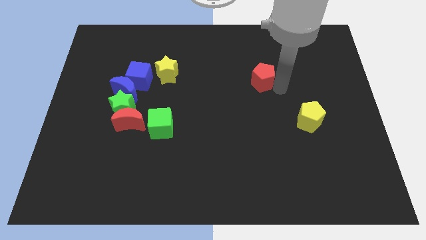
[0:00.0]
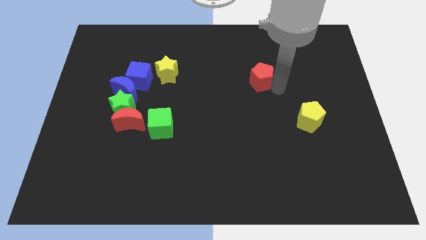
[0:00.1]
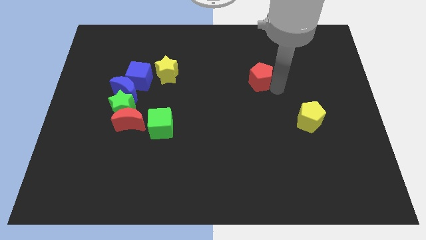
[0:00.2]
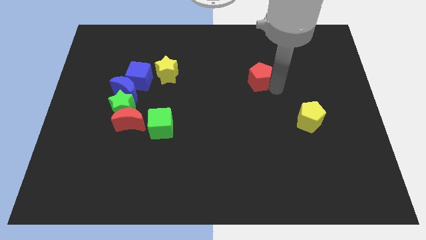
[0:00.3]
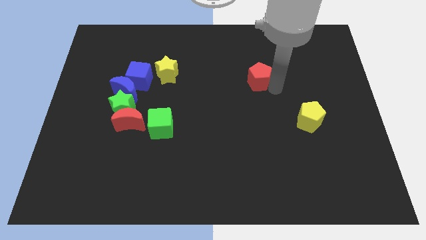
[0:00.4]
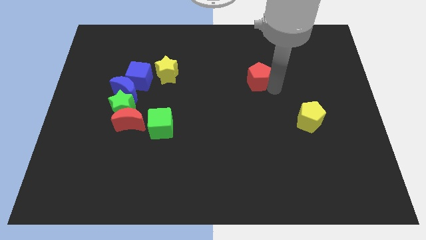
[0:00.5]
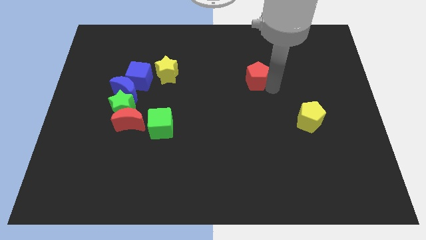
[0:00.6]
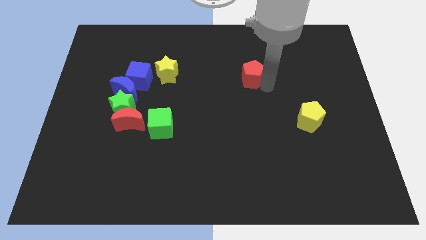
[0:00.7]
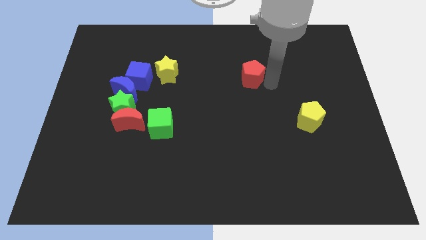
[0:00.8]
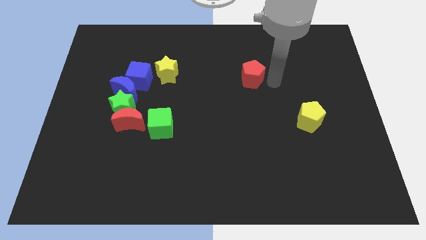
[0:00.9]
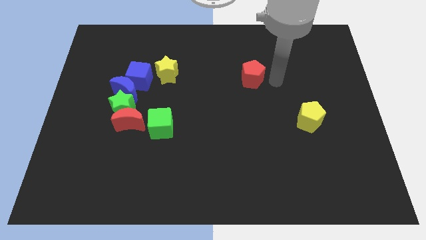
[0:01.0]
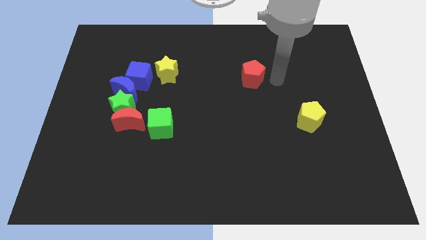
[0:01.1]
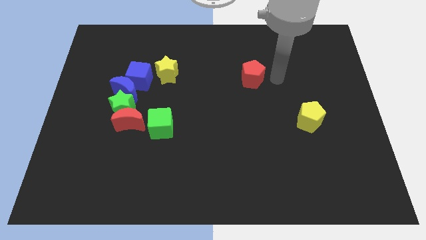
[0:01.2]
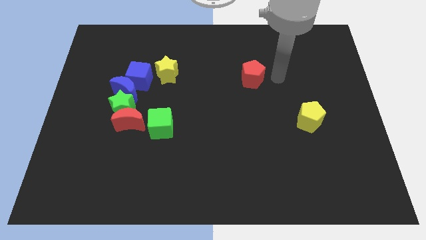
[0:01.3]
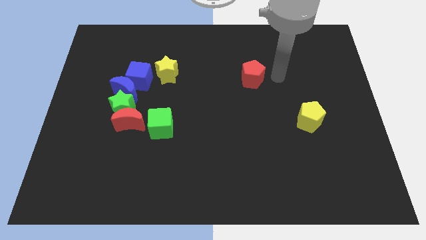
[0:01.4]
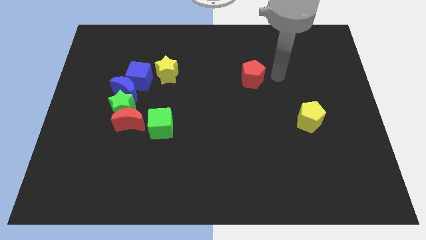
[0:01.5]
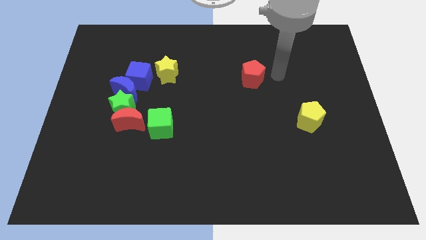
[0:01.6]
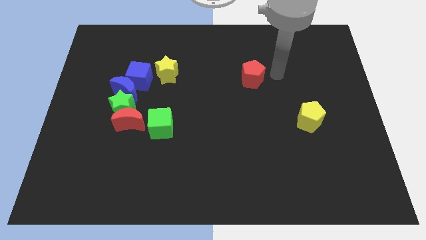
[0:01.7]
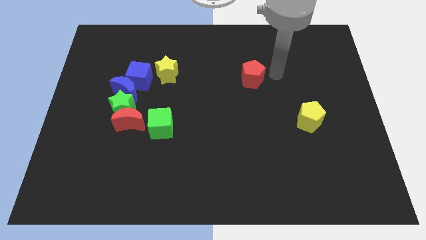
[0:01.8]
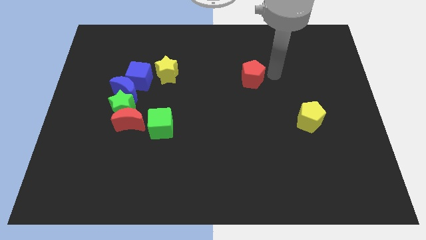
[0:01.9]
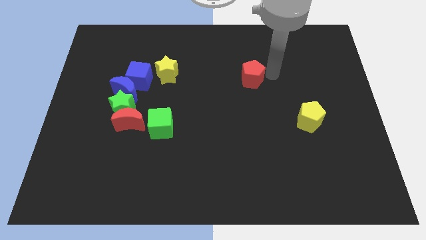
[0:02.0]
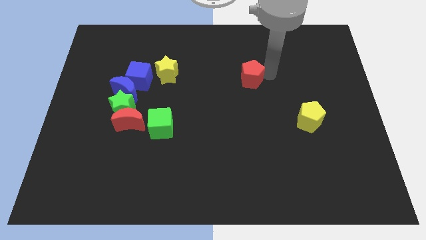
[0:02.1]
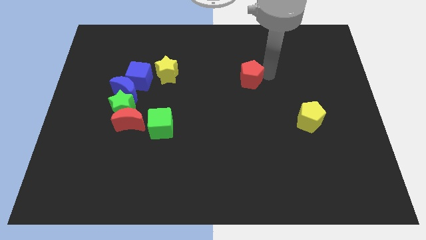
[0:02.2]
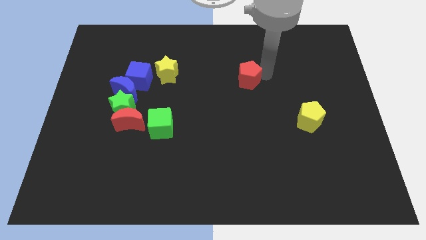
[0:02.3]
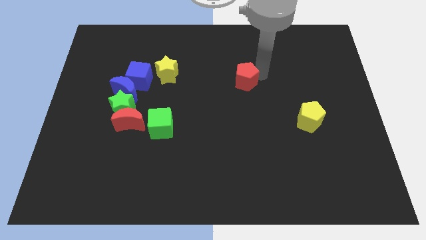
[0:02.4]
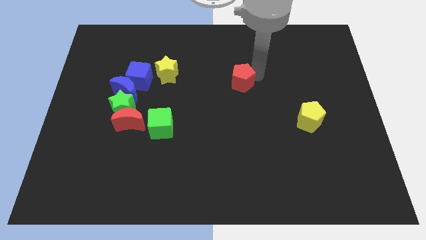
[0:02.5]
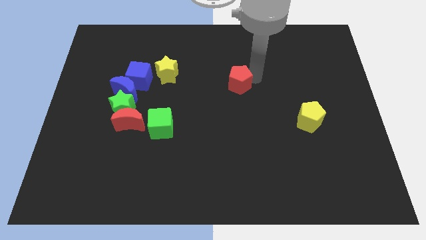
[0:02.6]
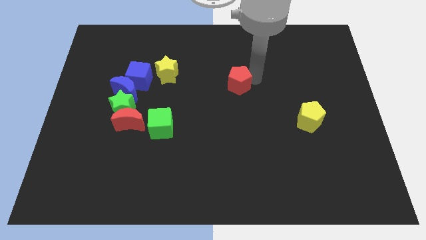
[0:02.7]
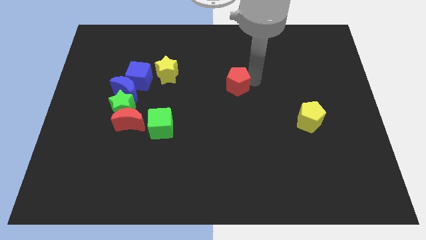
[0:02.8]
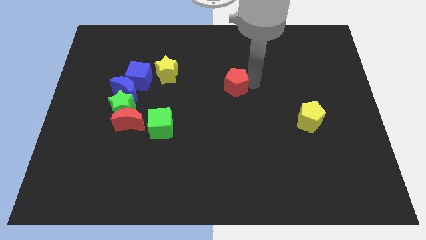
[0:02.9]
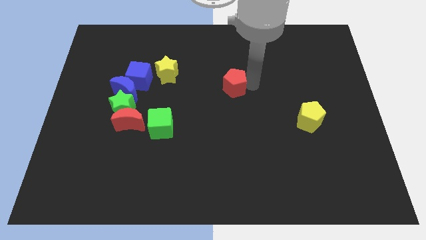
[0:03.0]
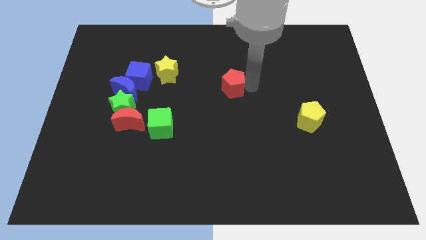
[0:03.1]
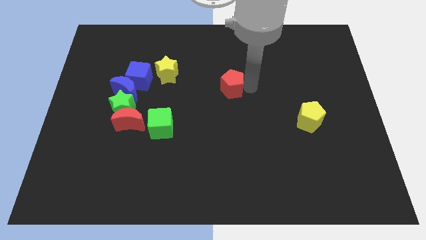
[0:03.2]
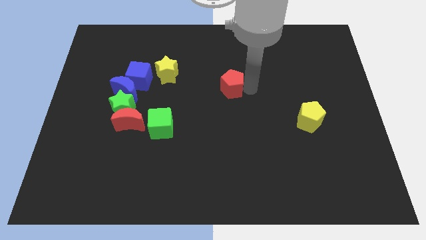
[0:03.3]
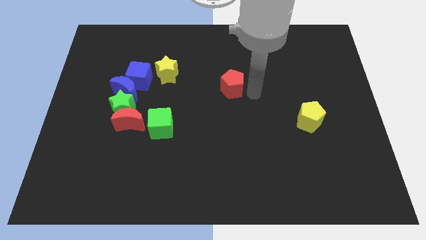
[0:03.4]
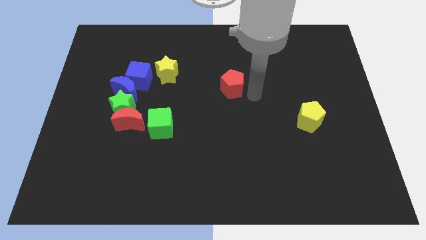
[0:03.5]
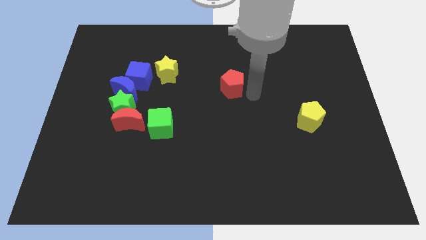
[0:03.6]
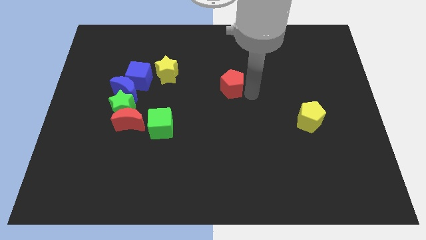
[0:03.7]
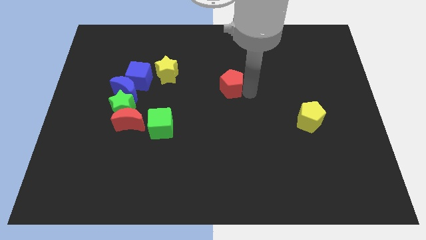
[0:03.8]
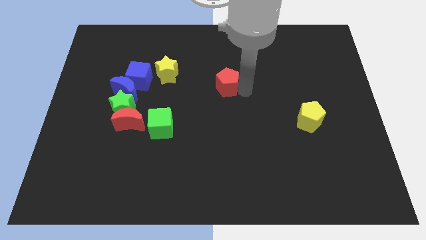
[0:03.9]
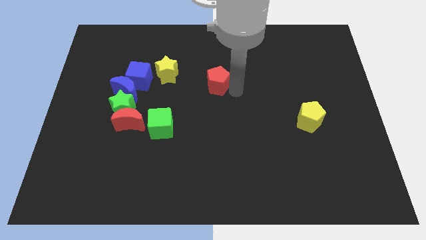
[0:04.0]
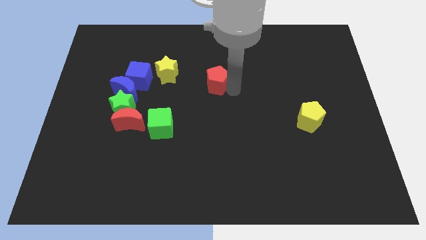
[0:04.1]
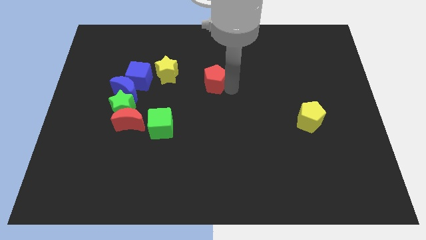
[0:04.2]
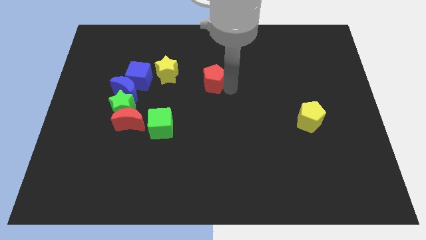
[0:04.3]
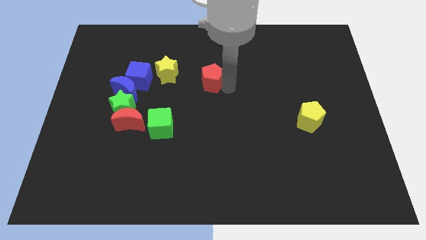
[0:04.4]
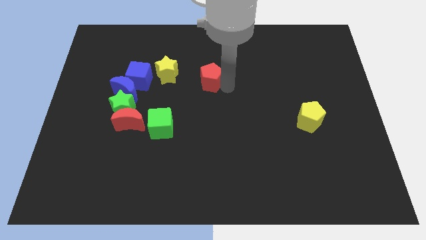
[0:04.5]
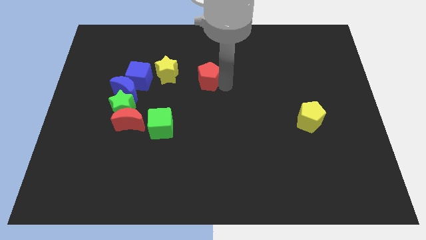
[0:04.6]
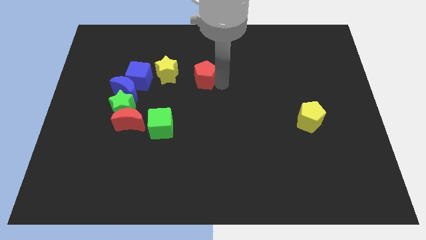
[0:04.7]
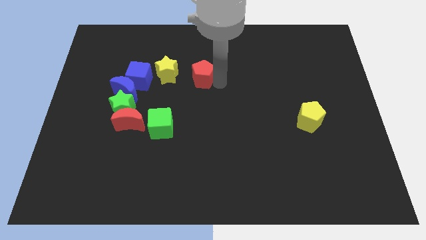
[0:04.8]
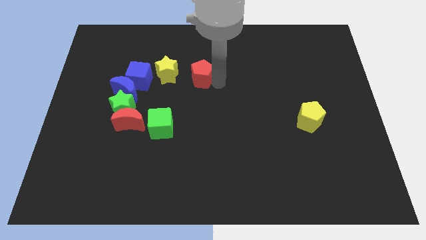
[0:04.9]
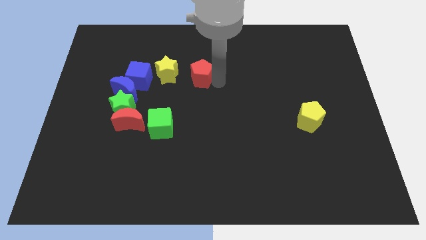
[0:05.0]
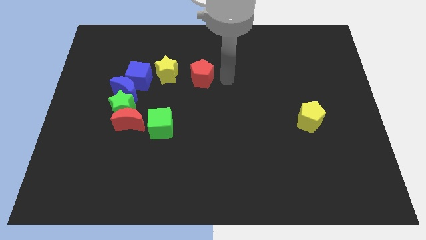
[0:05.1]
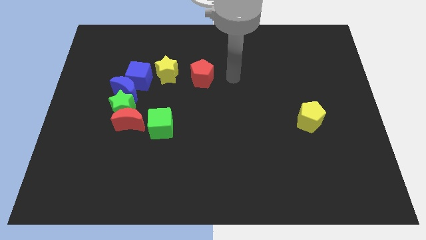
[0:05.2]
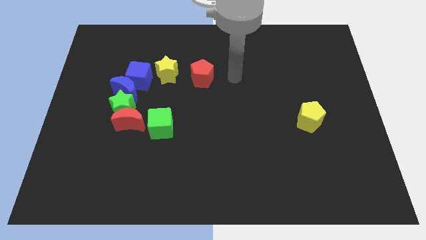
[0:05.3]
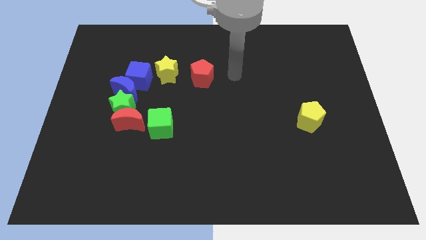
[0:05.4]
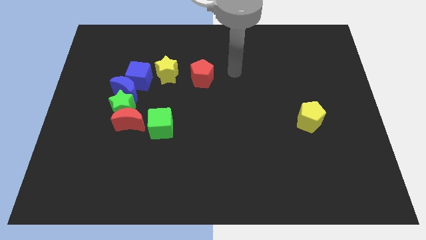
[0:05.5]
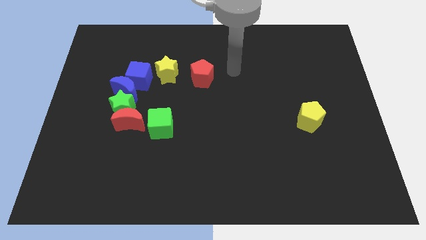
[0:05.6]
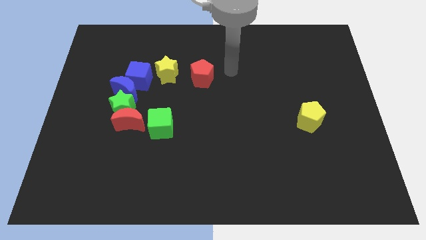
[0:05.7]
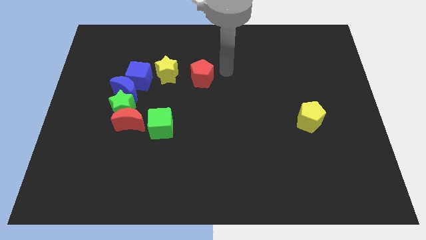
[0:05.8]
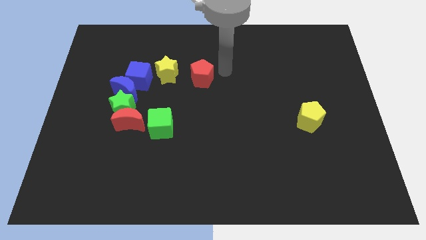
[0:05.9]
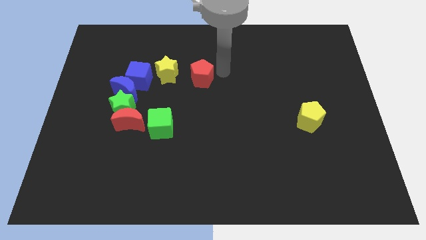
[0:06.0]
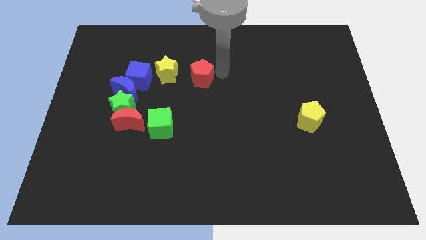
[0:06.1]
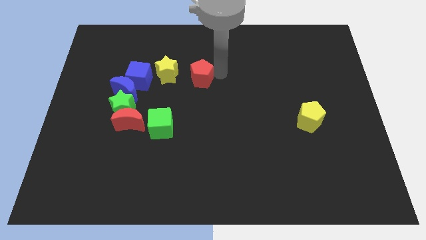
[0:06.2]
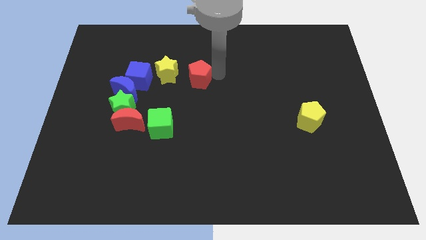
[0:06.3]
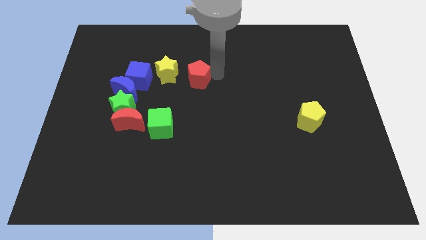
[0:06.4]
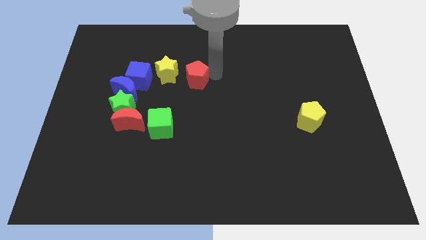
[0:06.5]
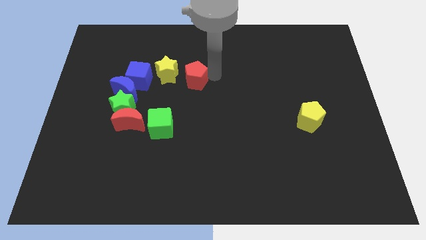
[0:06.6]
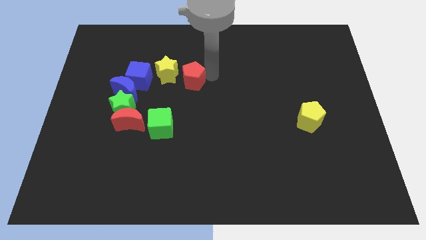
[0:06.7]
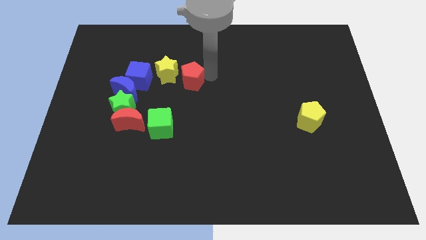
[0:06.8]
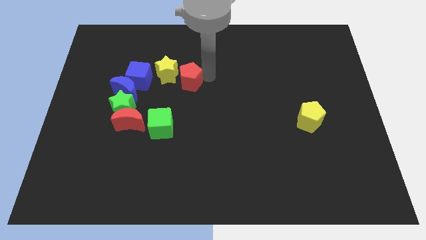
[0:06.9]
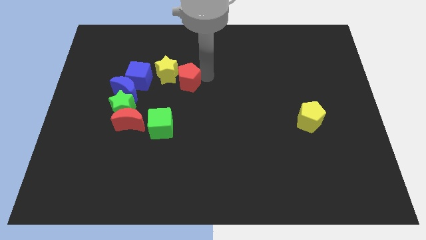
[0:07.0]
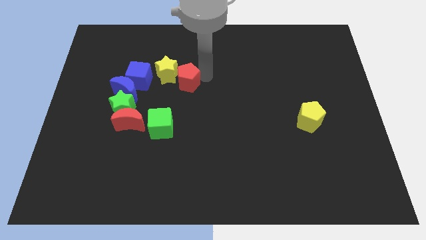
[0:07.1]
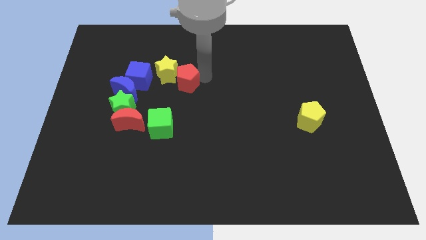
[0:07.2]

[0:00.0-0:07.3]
push red pentagon towards yellow star

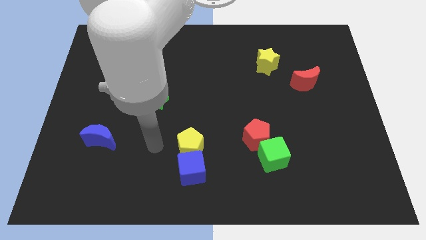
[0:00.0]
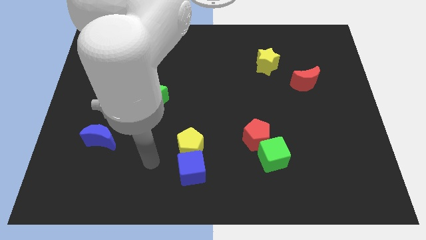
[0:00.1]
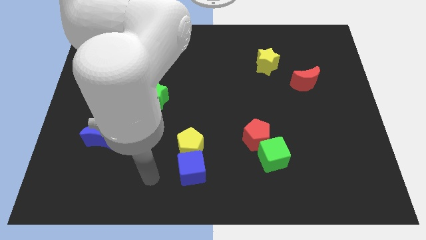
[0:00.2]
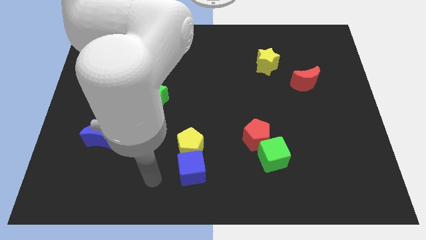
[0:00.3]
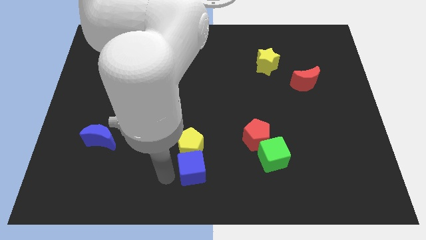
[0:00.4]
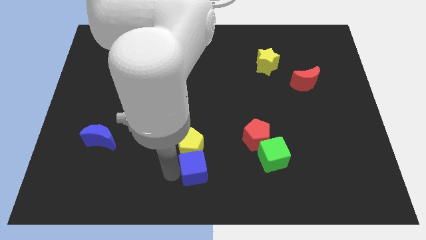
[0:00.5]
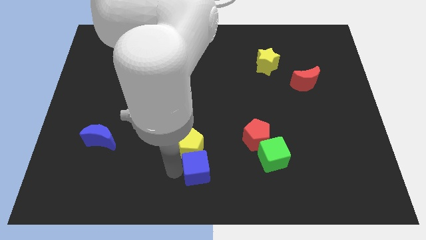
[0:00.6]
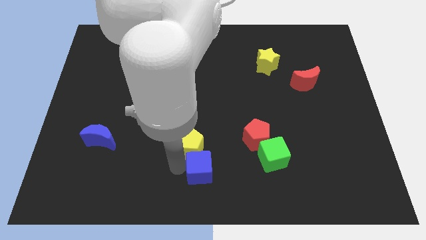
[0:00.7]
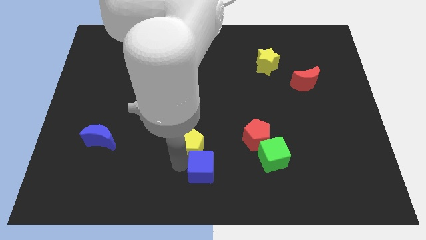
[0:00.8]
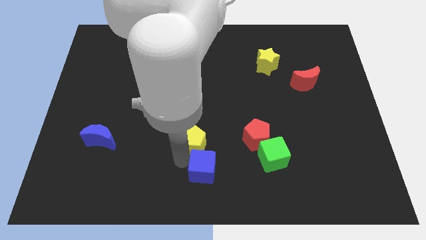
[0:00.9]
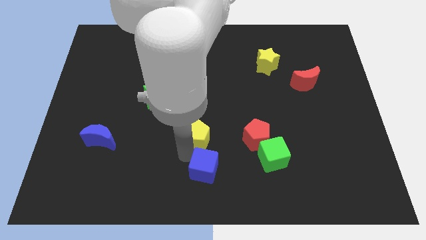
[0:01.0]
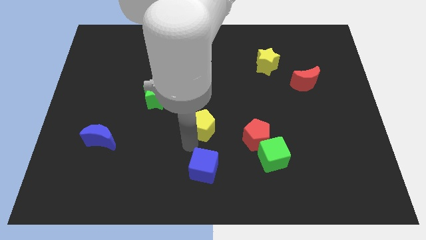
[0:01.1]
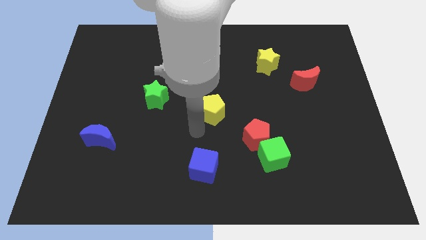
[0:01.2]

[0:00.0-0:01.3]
separate the yellow pentagon from the blue cube

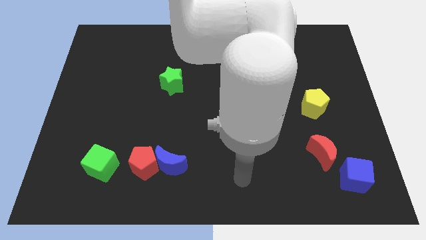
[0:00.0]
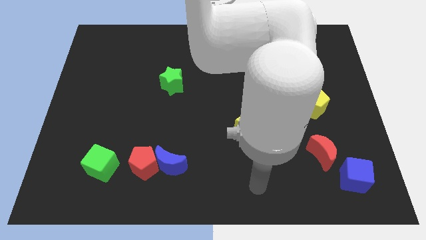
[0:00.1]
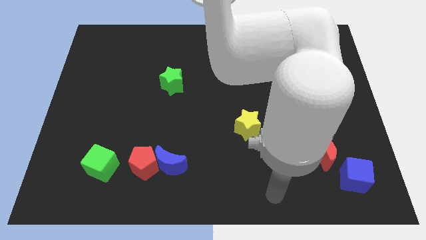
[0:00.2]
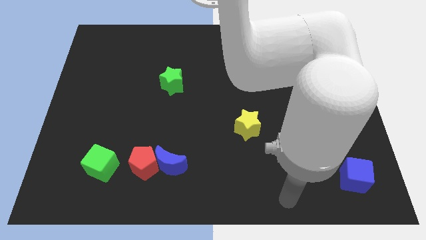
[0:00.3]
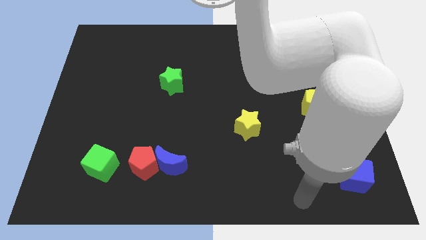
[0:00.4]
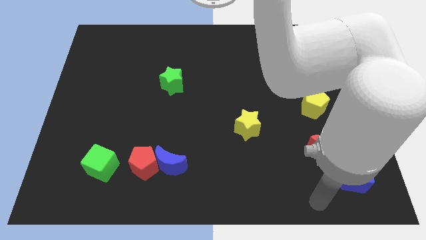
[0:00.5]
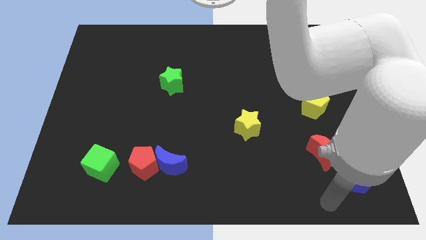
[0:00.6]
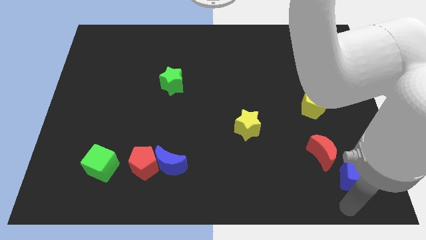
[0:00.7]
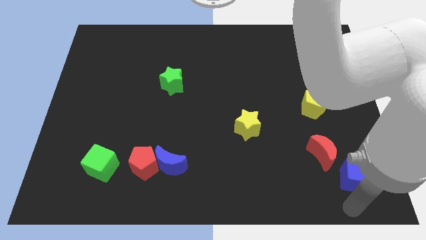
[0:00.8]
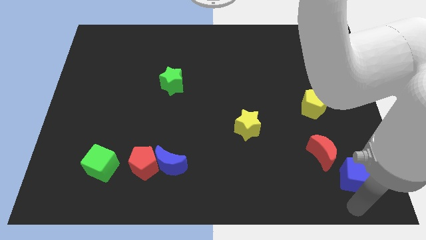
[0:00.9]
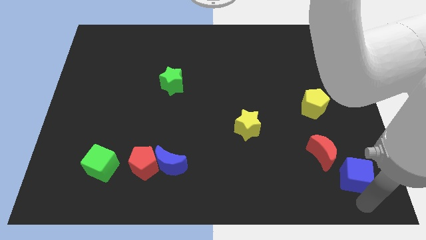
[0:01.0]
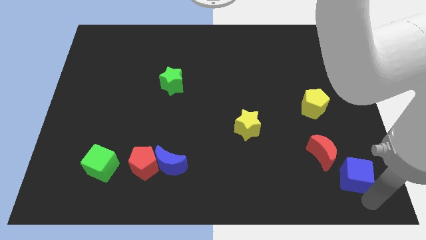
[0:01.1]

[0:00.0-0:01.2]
place your arm below blue cube
